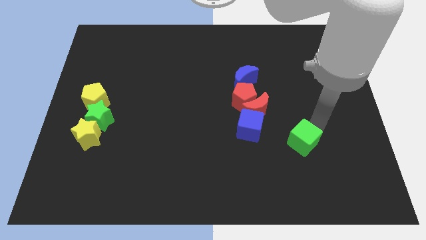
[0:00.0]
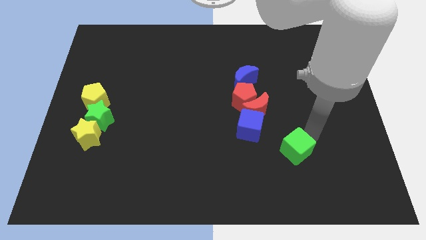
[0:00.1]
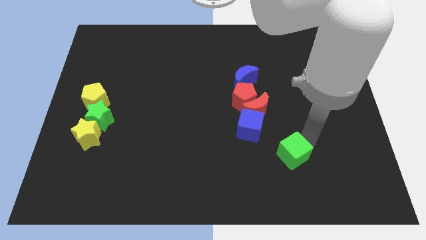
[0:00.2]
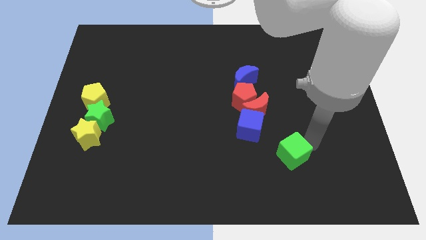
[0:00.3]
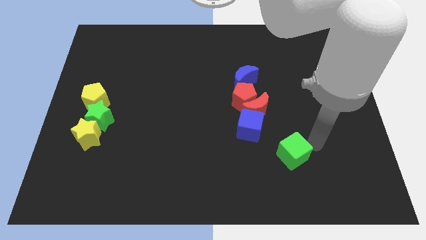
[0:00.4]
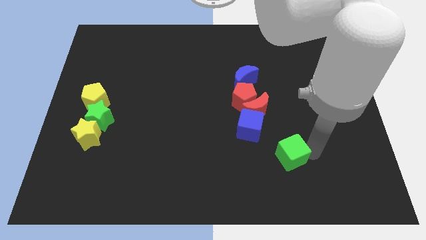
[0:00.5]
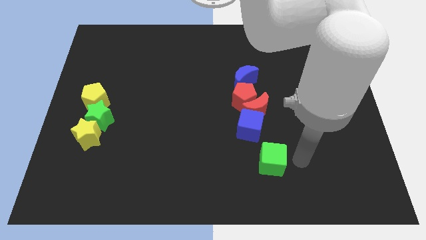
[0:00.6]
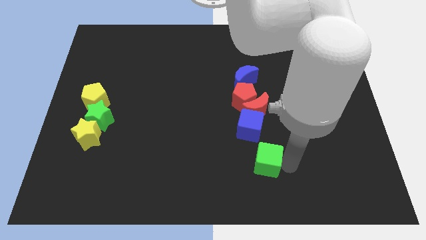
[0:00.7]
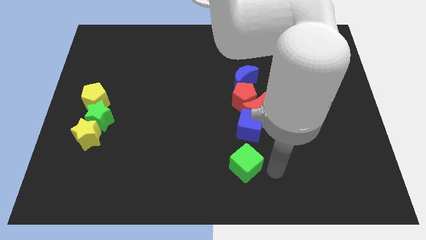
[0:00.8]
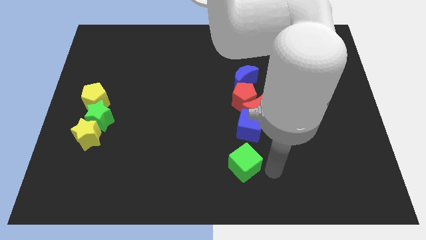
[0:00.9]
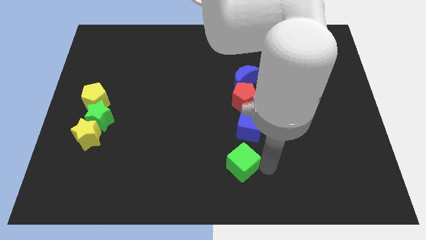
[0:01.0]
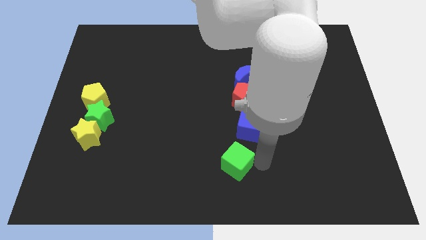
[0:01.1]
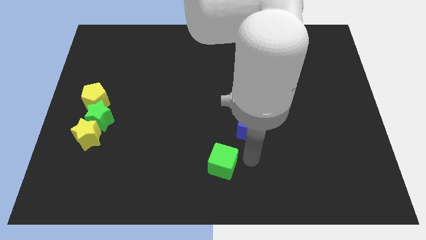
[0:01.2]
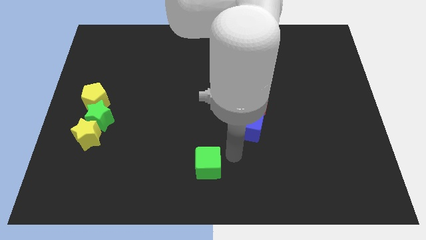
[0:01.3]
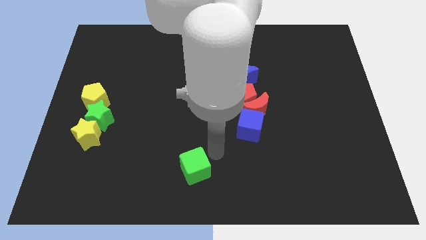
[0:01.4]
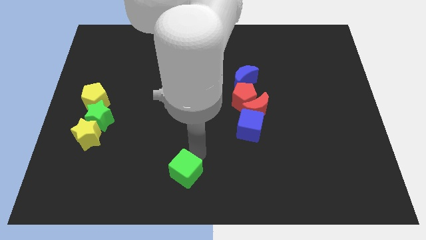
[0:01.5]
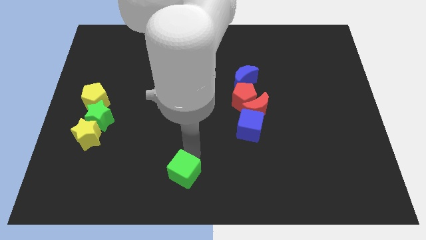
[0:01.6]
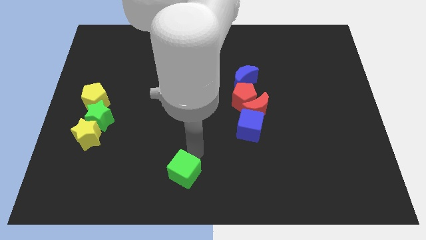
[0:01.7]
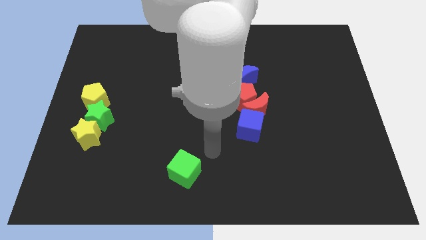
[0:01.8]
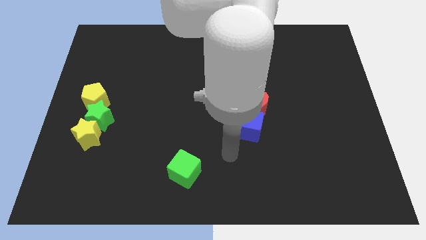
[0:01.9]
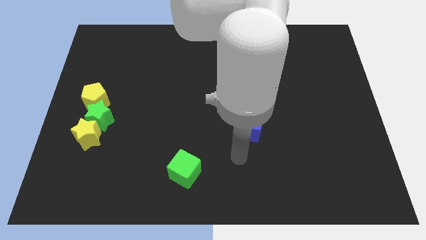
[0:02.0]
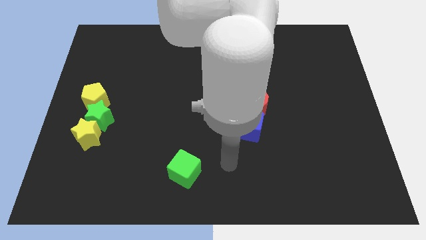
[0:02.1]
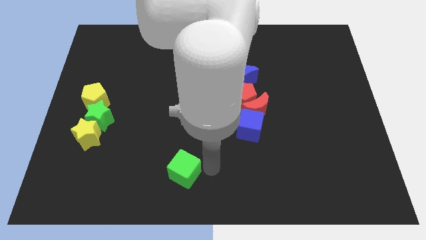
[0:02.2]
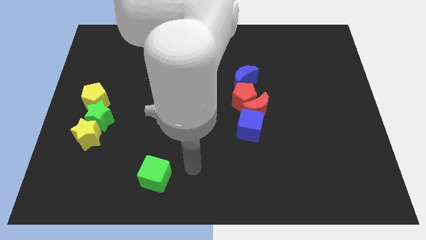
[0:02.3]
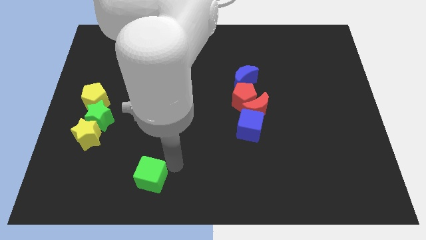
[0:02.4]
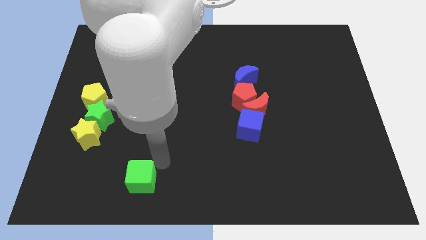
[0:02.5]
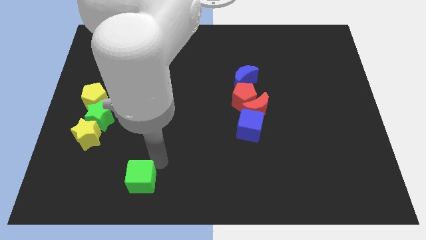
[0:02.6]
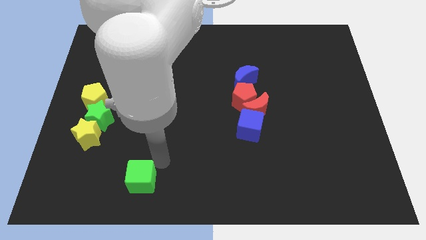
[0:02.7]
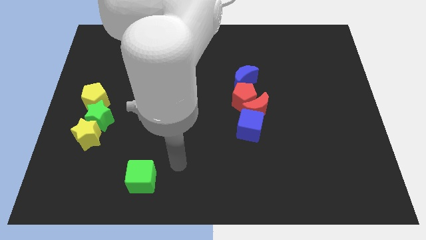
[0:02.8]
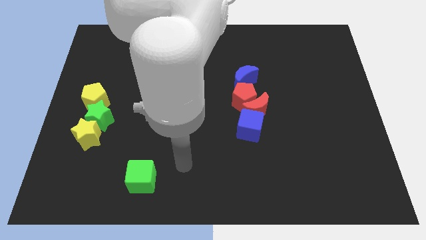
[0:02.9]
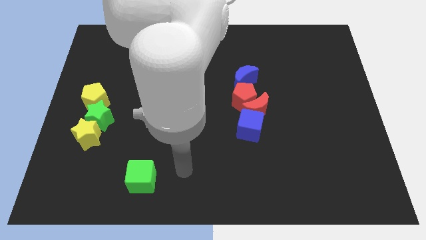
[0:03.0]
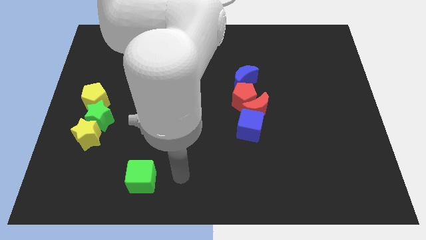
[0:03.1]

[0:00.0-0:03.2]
push the green cube towards the bottom left corner of the board

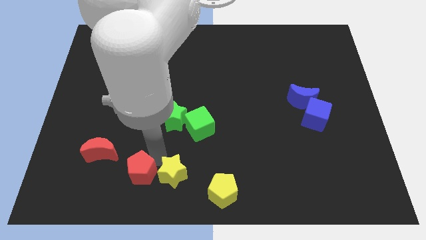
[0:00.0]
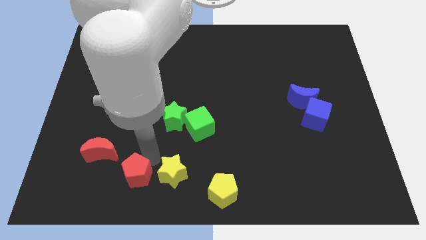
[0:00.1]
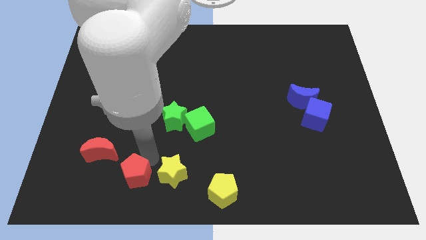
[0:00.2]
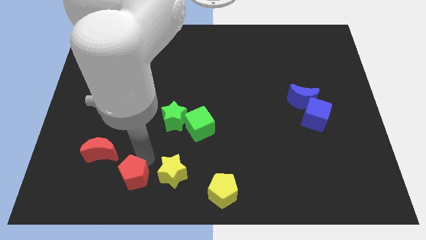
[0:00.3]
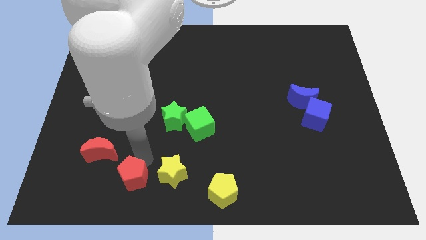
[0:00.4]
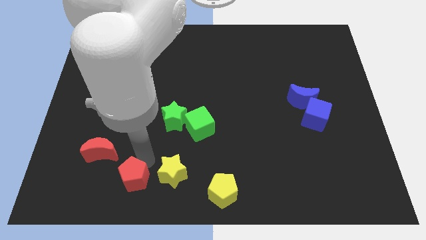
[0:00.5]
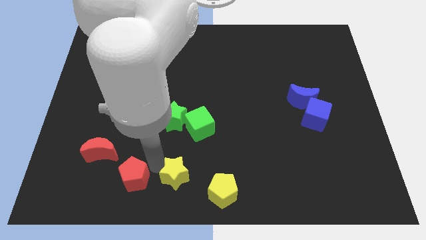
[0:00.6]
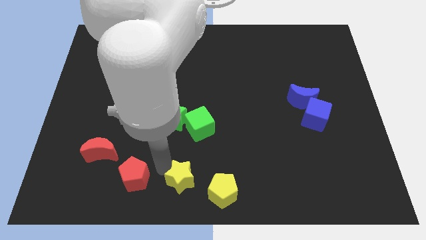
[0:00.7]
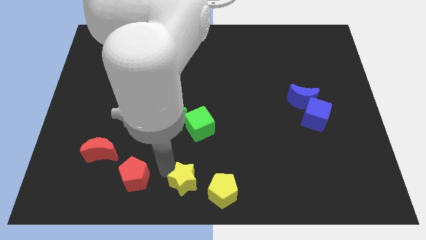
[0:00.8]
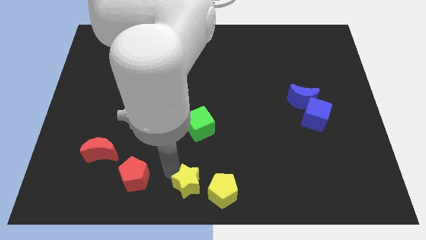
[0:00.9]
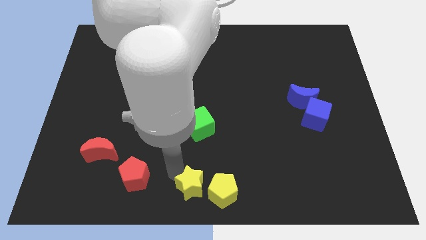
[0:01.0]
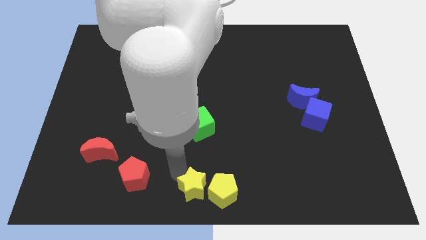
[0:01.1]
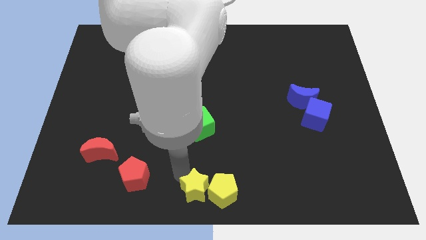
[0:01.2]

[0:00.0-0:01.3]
push the red pentagon and yellow star apart

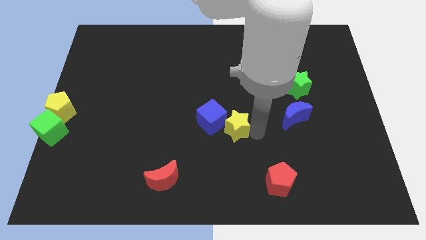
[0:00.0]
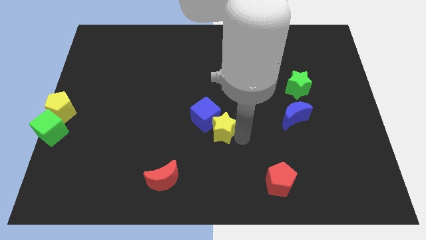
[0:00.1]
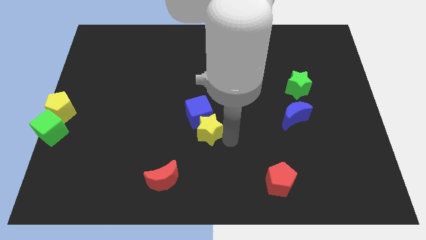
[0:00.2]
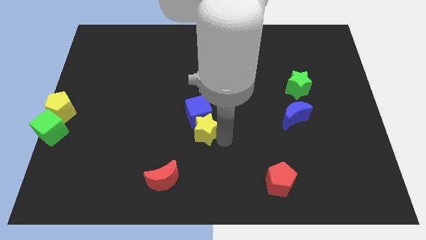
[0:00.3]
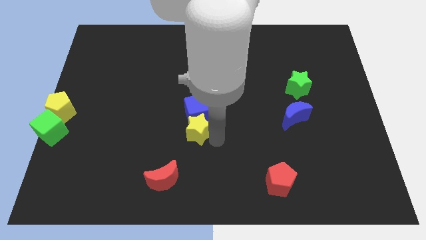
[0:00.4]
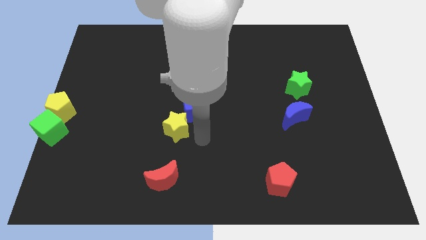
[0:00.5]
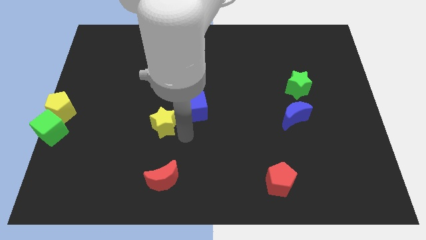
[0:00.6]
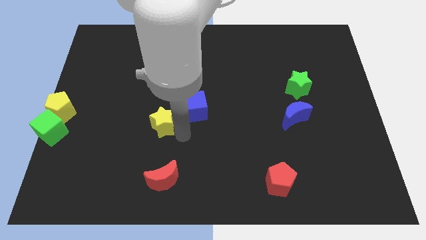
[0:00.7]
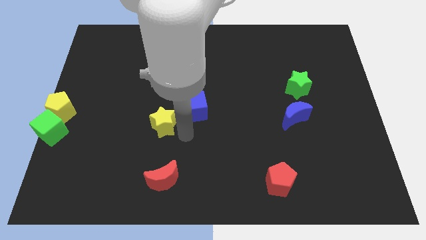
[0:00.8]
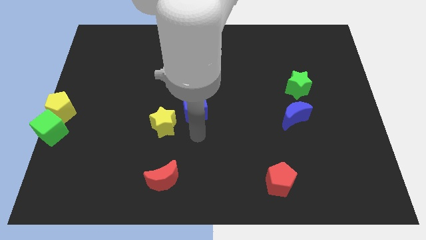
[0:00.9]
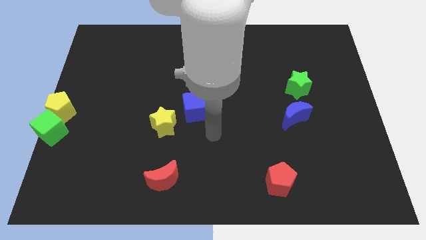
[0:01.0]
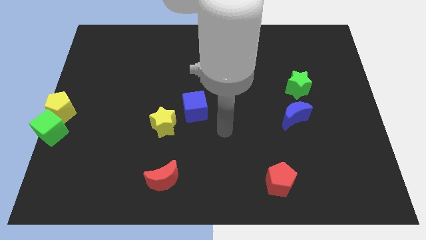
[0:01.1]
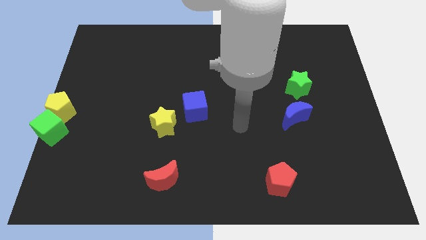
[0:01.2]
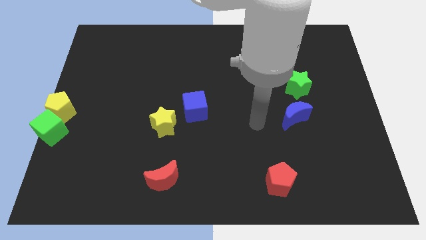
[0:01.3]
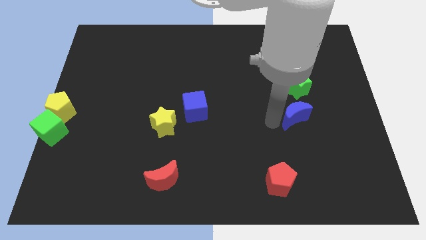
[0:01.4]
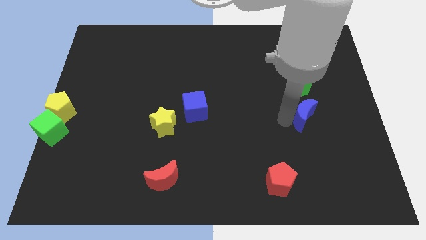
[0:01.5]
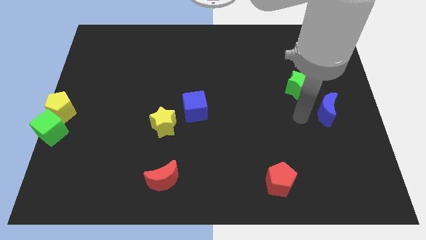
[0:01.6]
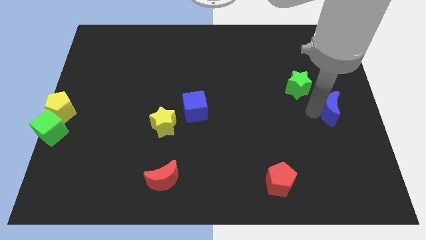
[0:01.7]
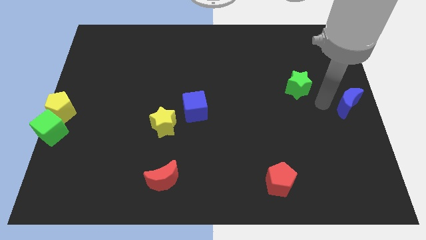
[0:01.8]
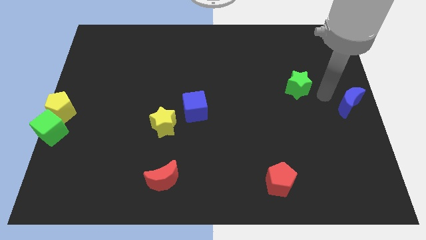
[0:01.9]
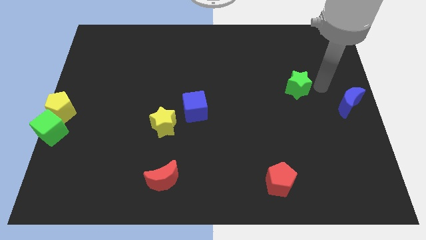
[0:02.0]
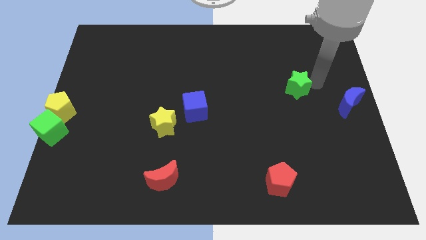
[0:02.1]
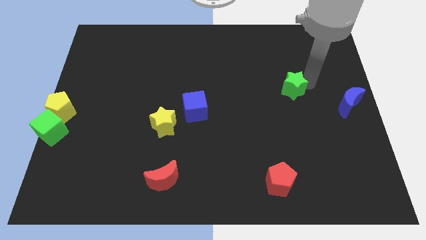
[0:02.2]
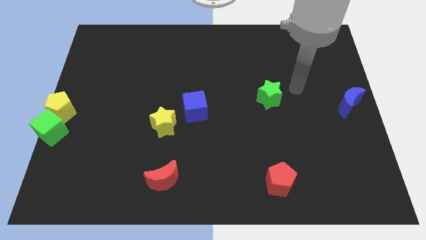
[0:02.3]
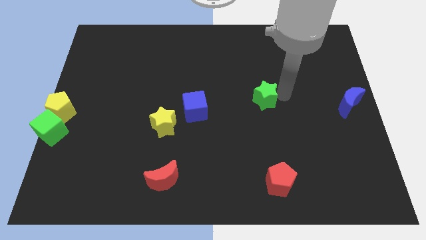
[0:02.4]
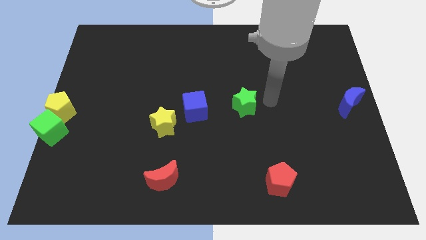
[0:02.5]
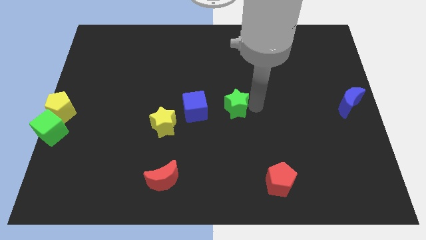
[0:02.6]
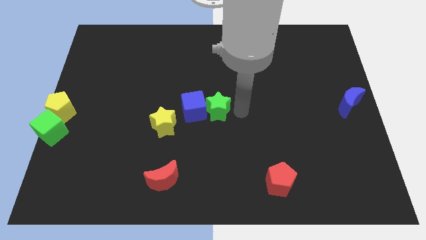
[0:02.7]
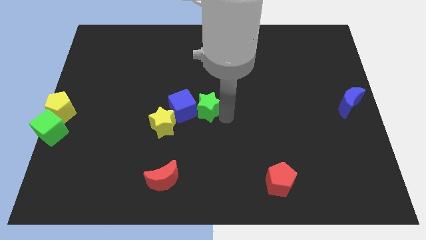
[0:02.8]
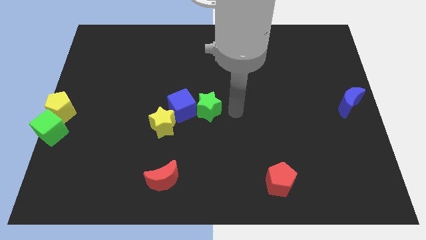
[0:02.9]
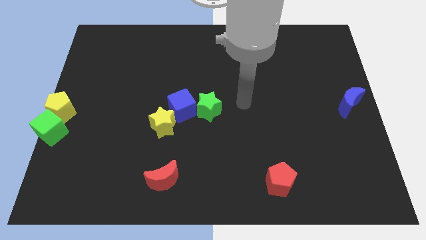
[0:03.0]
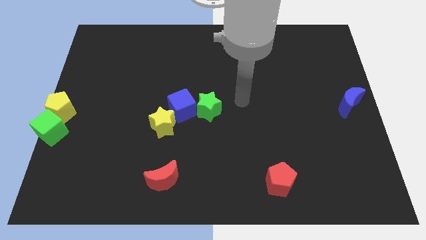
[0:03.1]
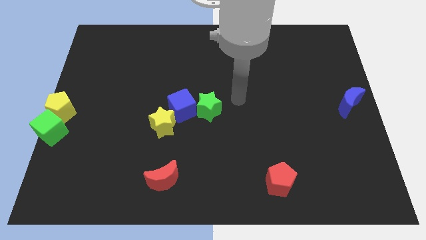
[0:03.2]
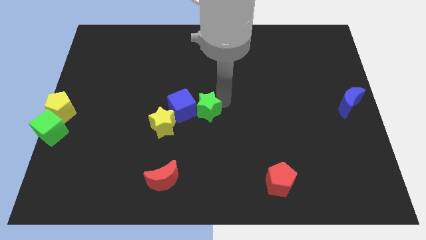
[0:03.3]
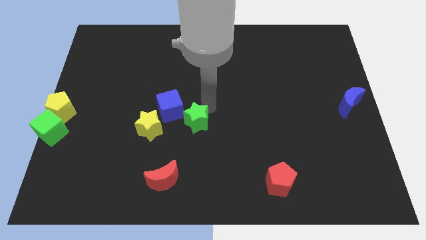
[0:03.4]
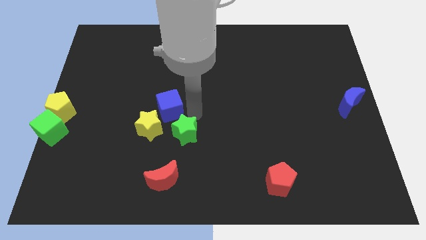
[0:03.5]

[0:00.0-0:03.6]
move the green star to the bottom right side of the blue cube

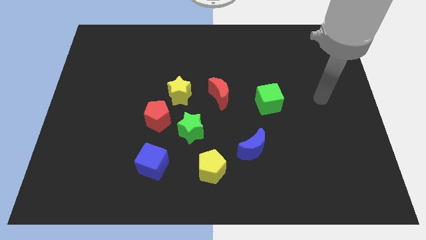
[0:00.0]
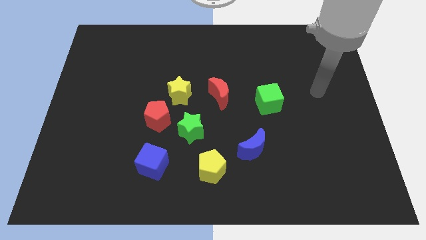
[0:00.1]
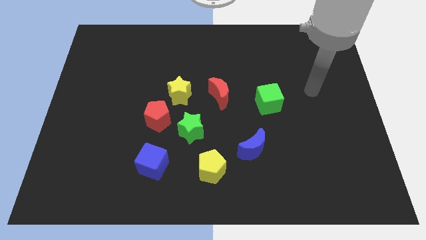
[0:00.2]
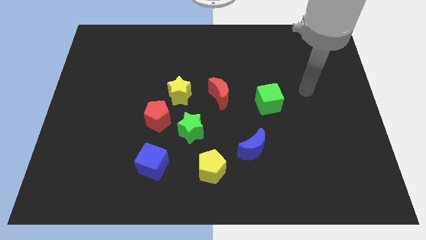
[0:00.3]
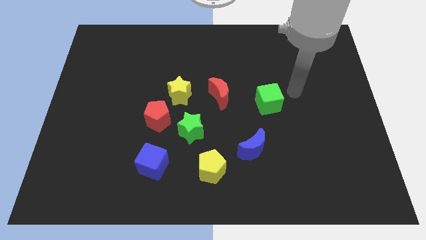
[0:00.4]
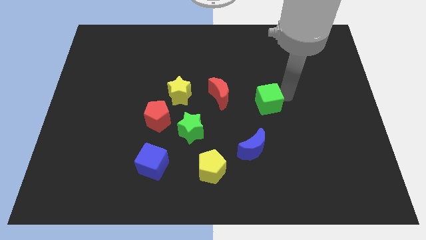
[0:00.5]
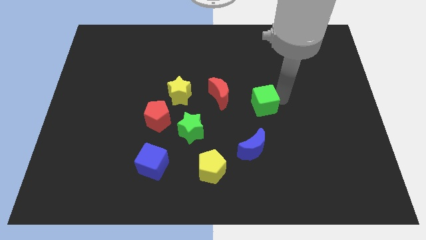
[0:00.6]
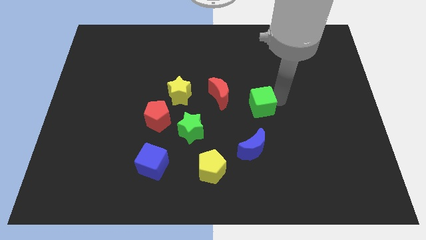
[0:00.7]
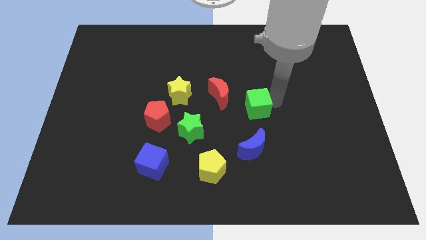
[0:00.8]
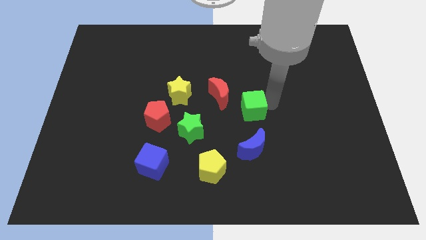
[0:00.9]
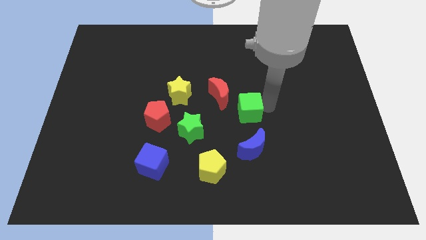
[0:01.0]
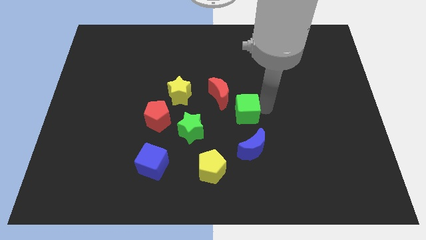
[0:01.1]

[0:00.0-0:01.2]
move the green cube above the blue crescent
